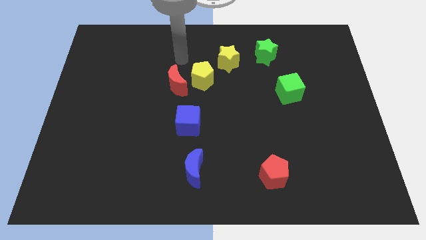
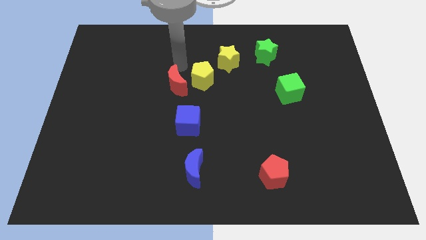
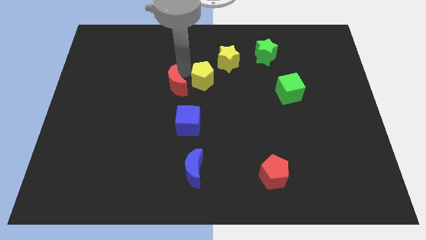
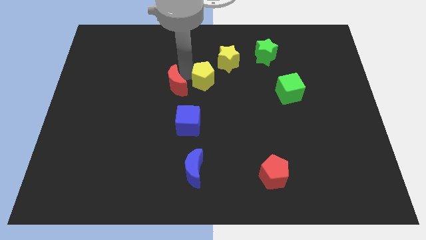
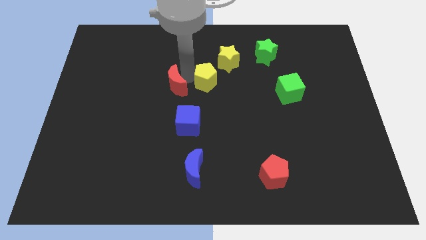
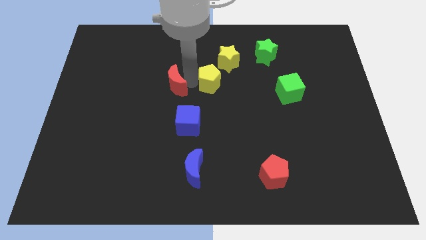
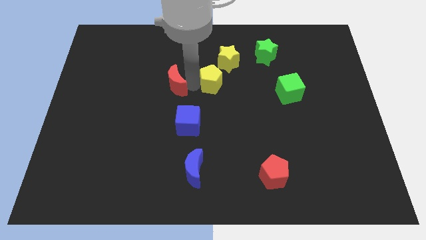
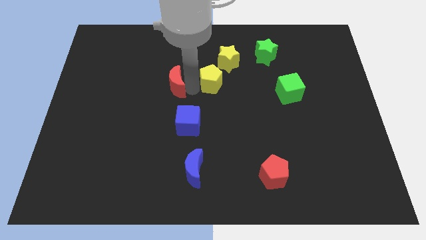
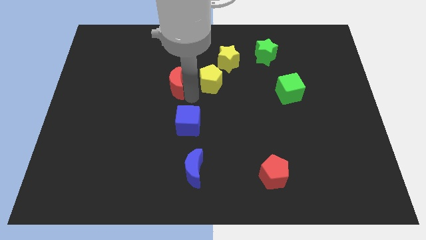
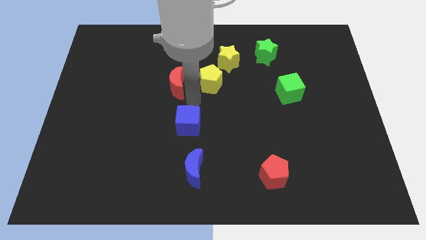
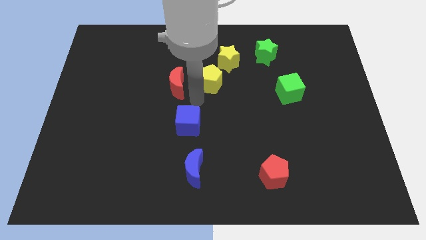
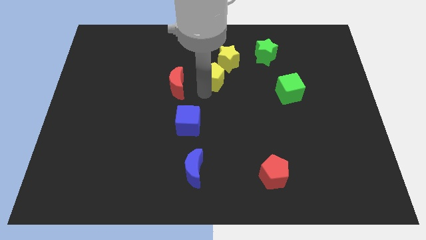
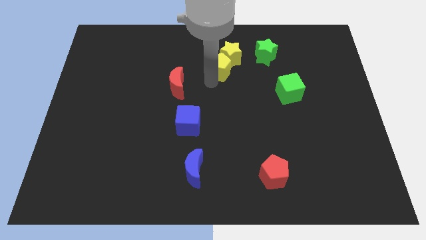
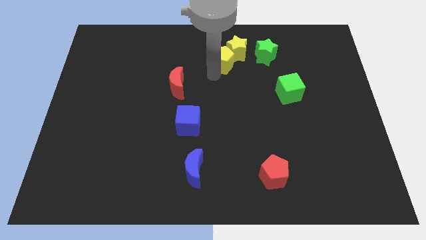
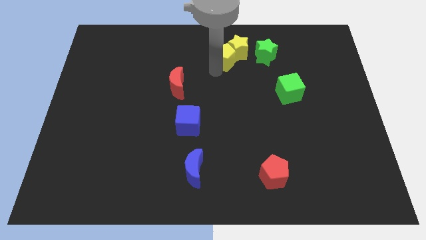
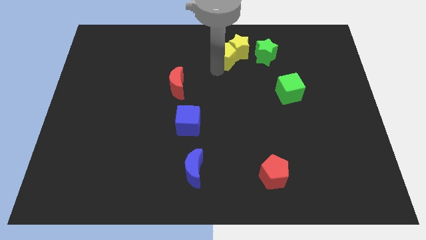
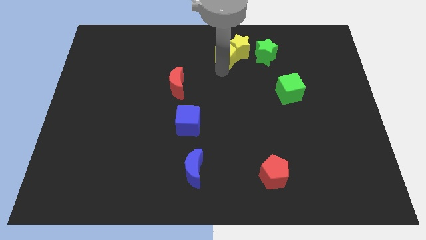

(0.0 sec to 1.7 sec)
move the yellow pentagon into the yellow star

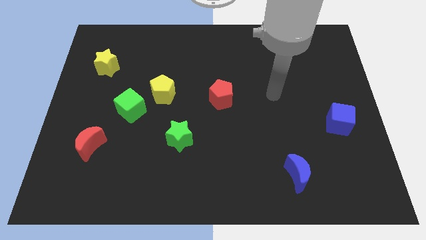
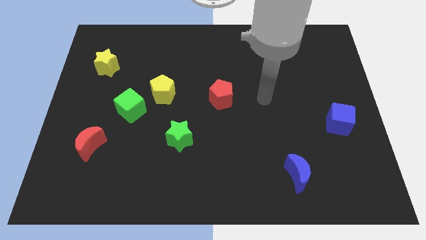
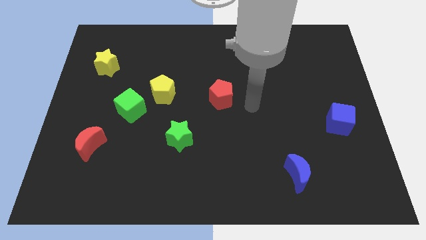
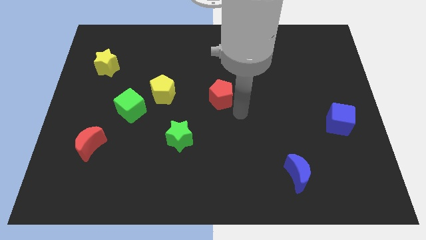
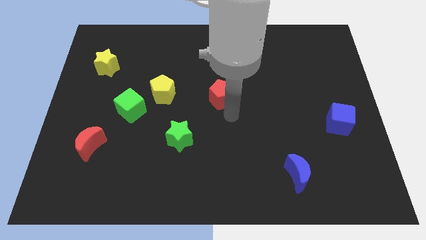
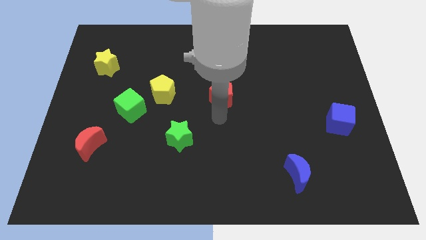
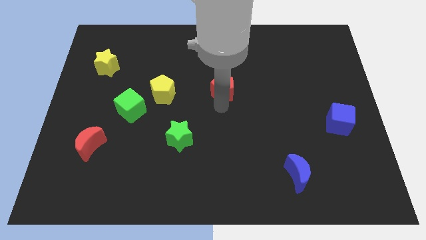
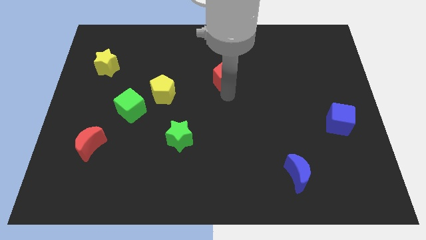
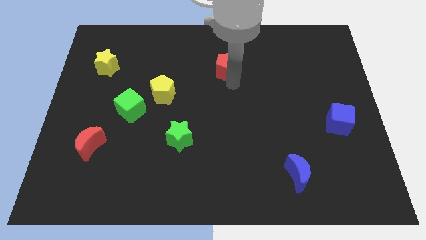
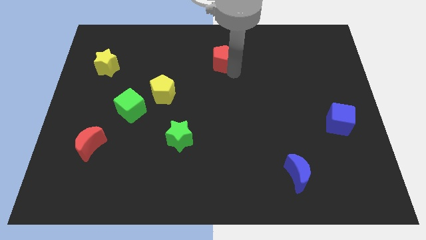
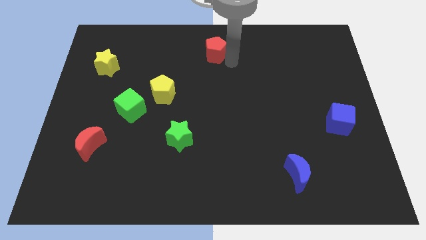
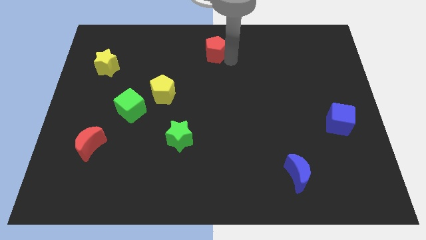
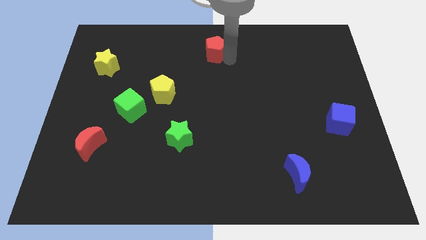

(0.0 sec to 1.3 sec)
push the red pentagon slightly to the top

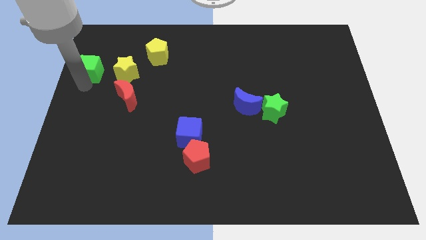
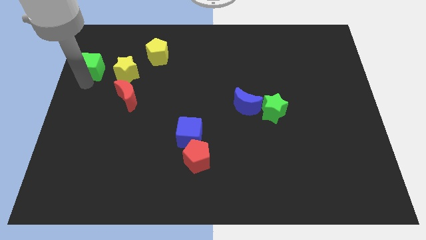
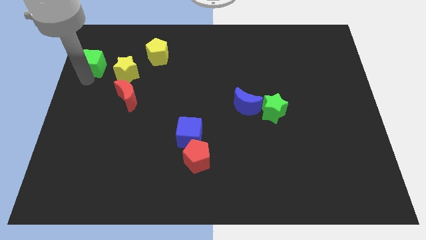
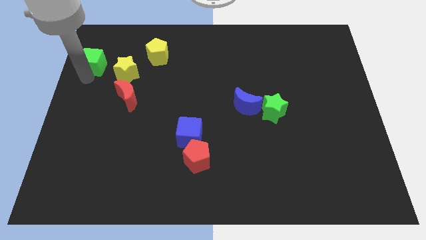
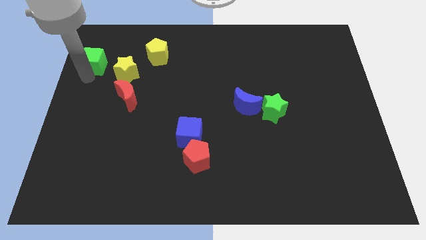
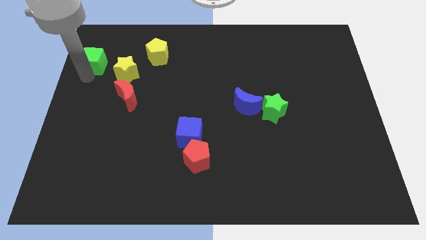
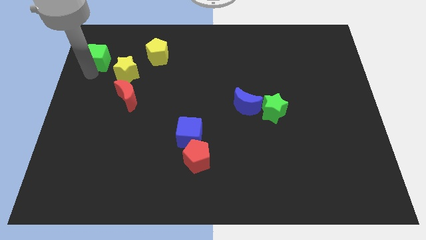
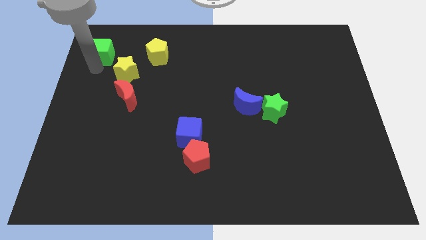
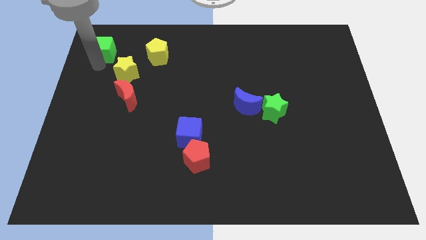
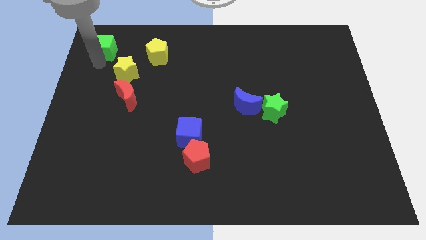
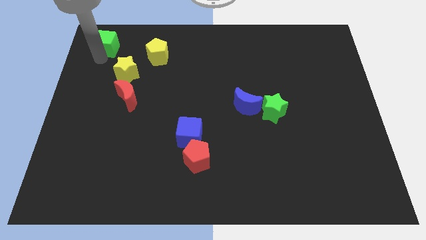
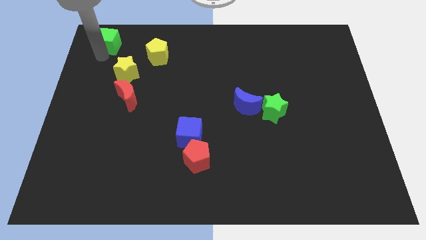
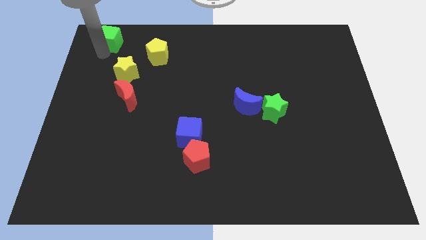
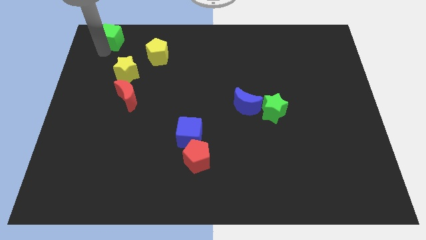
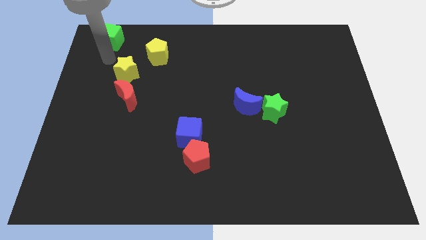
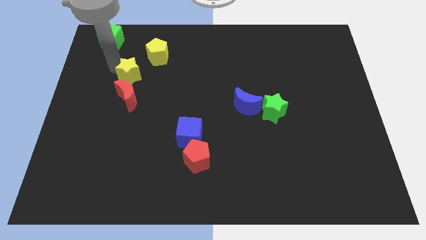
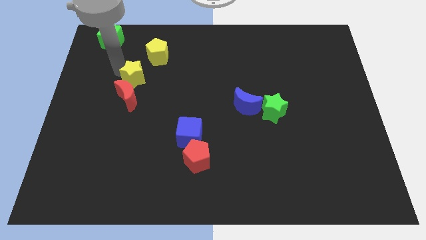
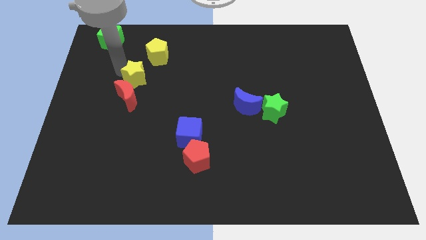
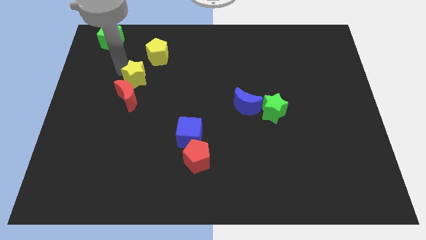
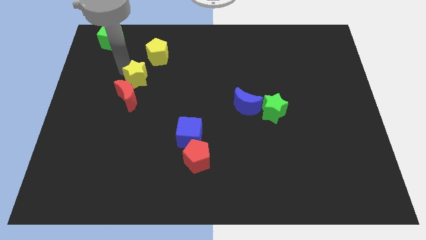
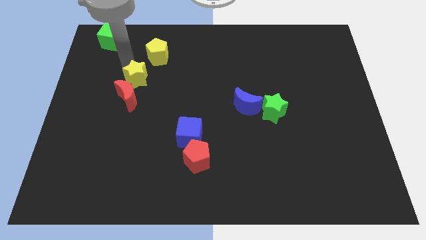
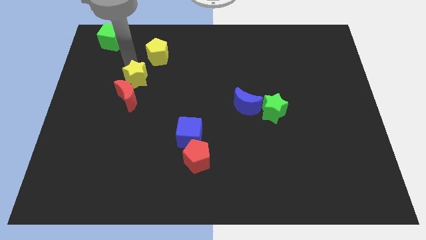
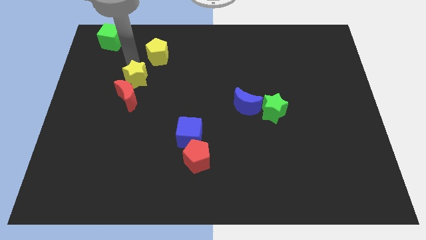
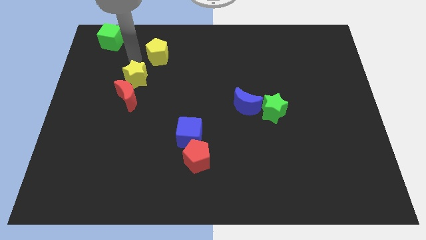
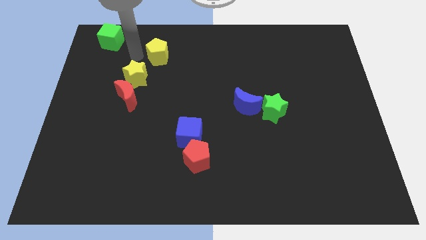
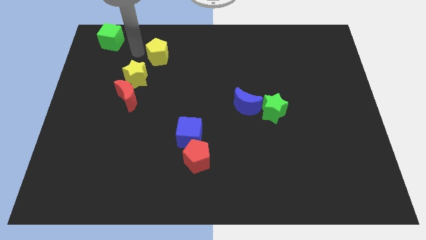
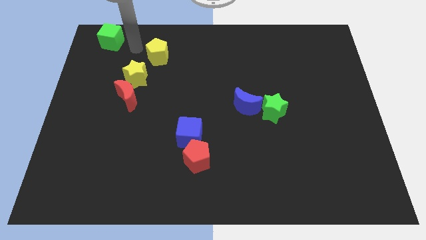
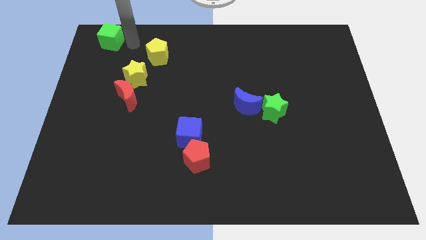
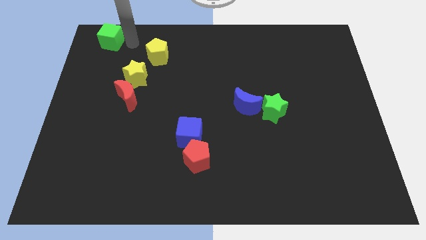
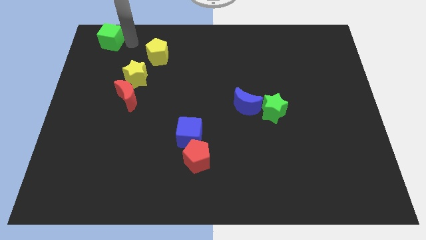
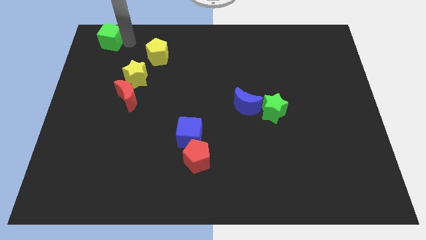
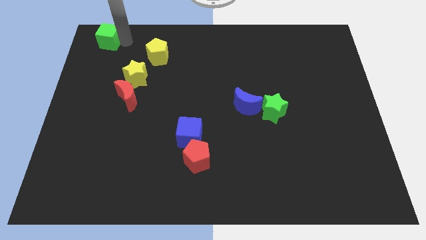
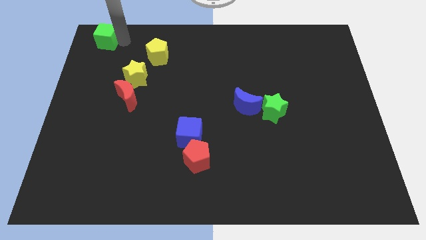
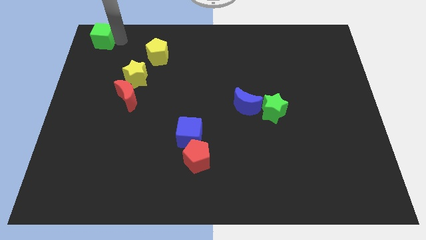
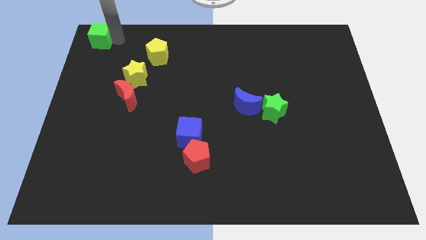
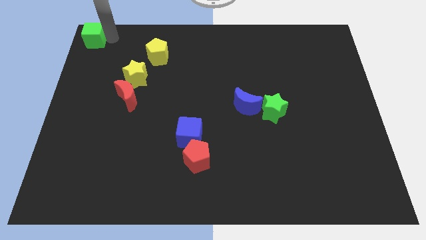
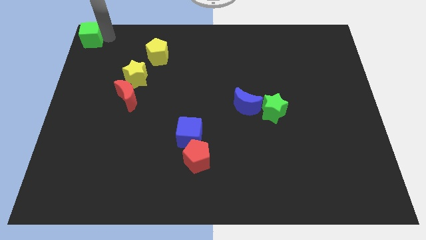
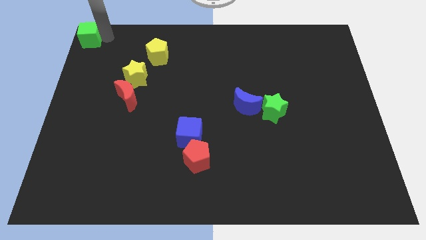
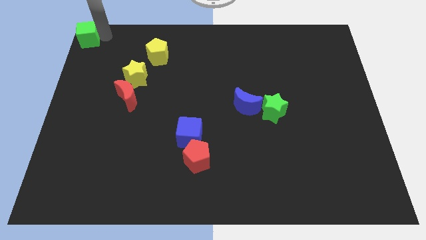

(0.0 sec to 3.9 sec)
move the green cube to the top left corner

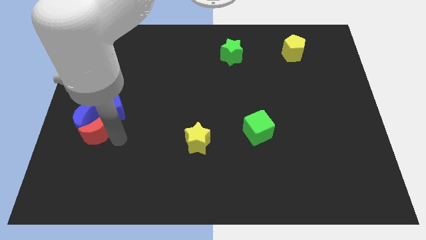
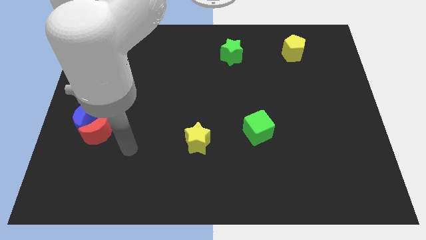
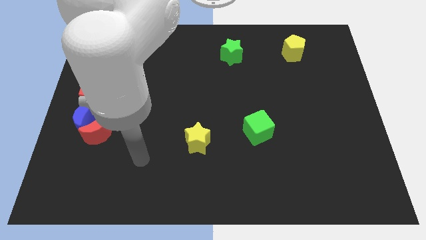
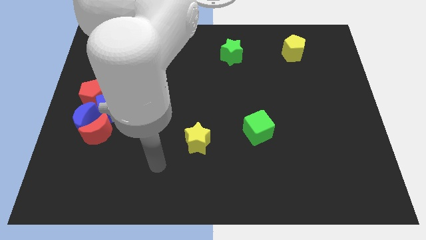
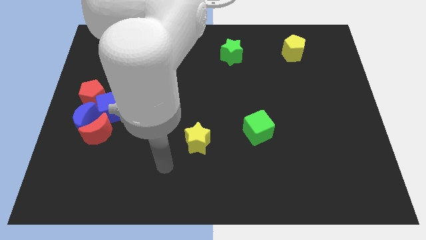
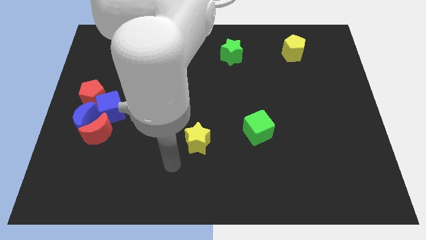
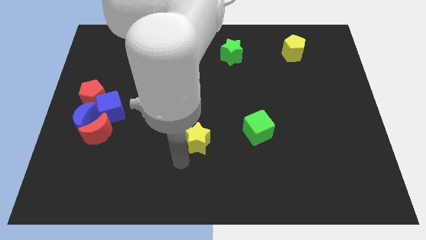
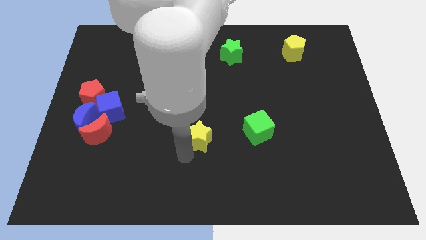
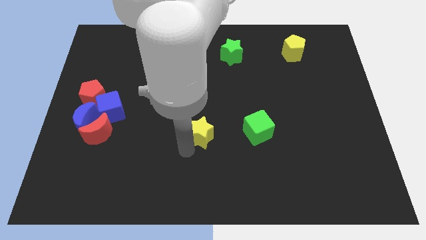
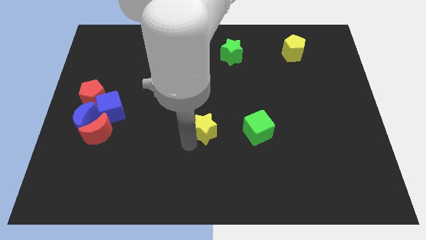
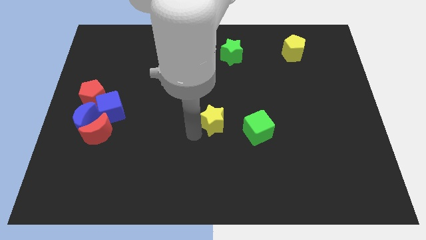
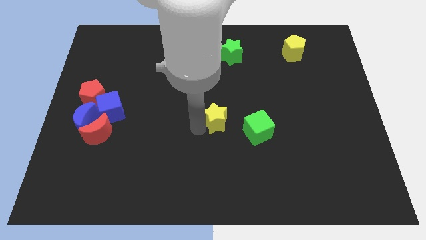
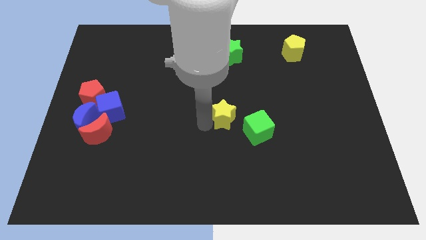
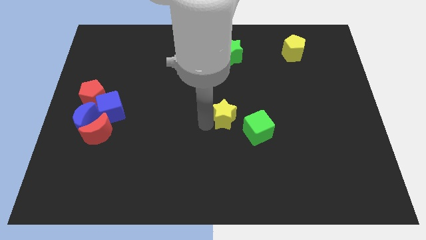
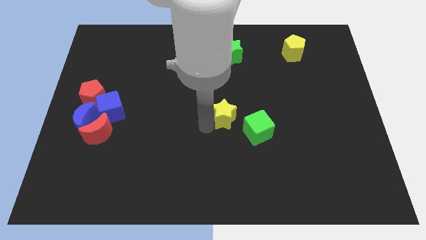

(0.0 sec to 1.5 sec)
slide the yellow star to the left side of the green cube

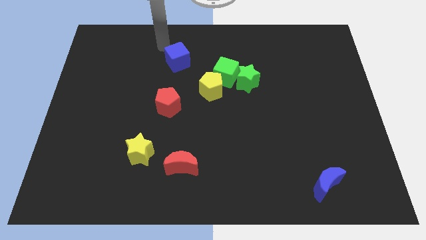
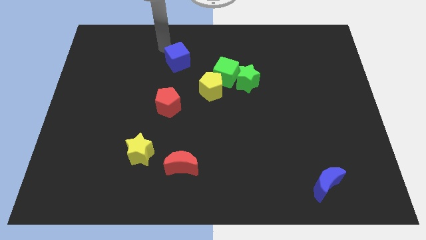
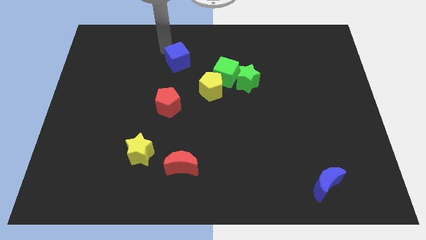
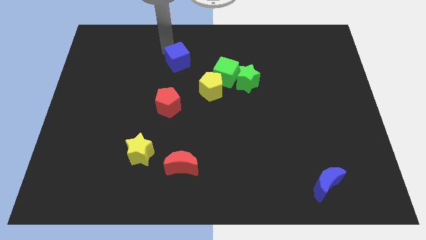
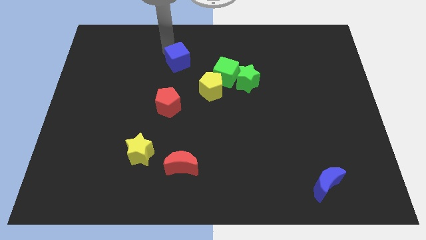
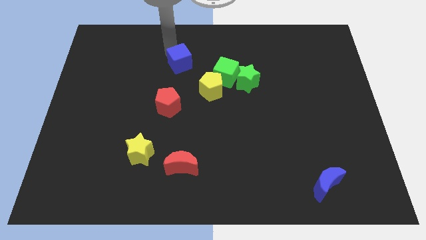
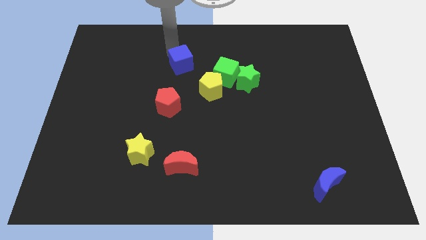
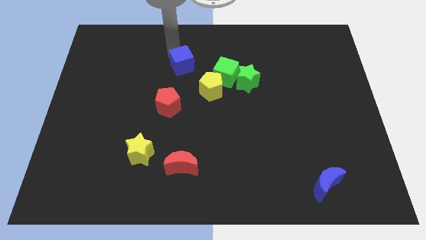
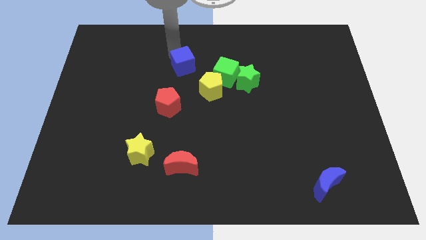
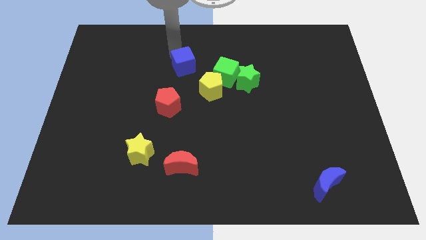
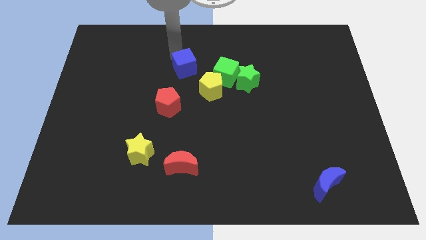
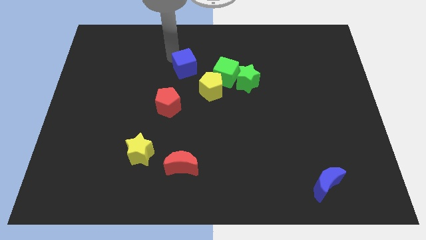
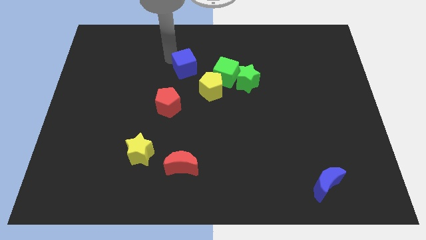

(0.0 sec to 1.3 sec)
push the blue cube towards the yellow pentagon
